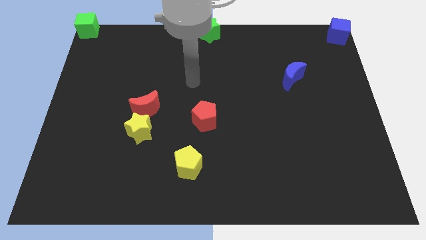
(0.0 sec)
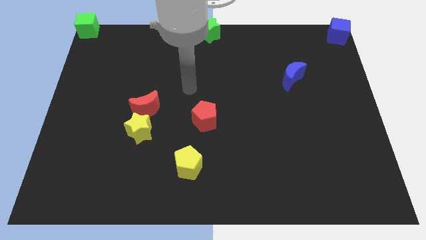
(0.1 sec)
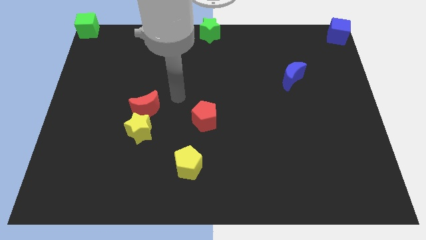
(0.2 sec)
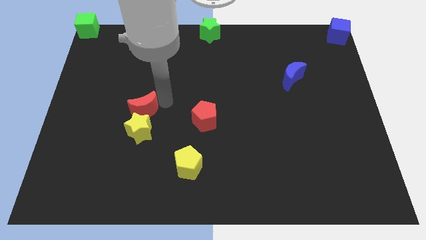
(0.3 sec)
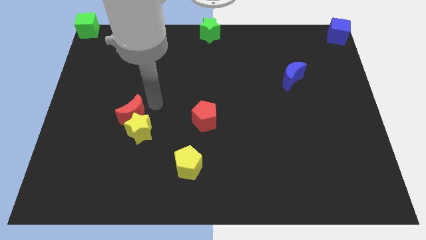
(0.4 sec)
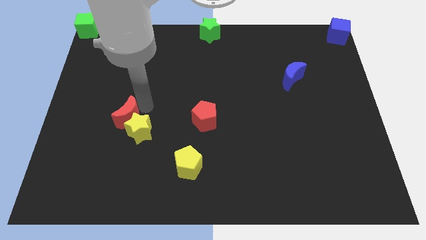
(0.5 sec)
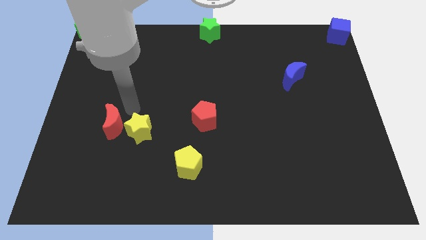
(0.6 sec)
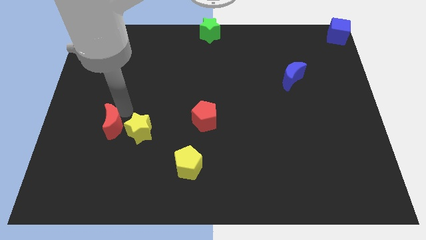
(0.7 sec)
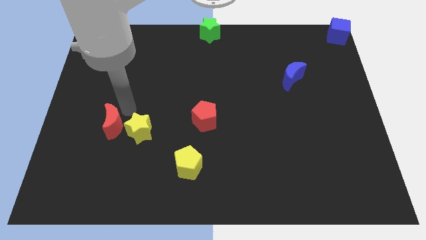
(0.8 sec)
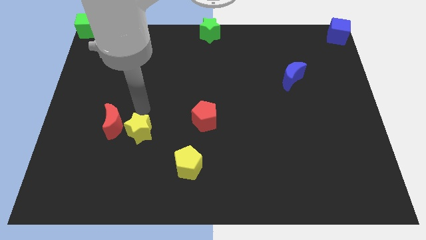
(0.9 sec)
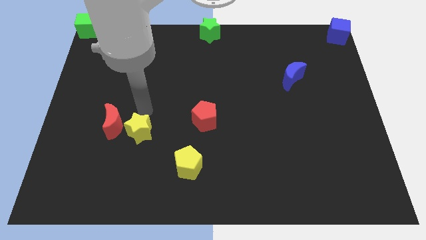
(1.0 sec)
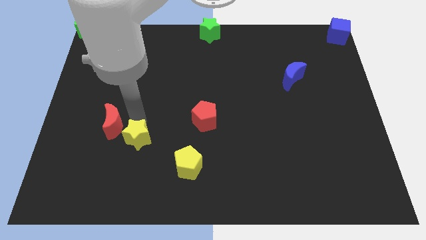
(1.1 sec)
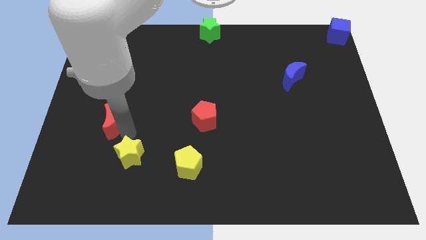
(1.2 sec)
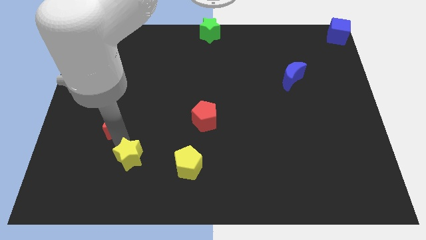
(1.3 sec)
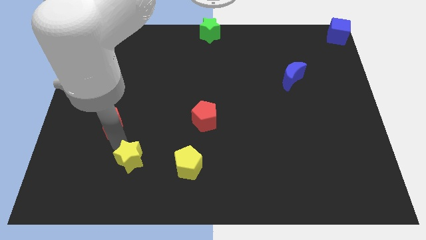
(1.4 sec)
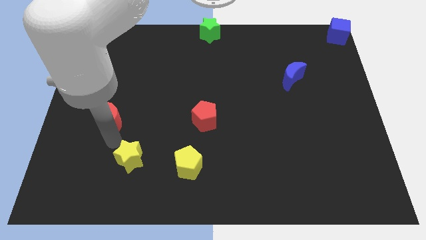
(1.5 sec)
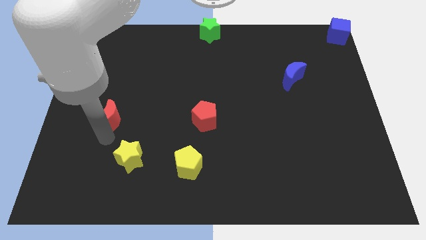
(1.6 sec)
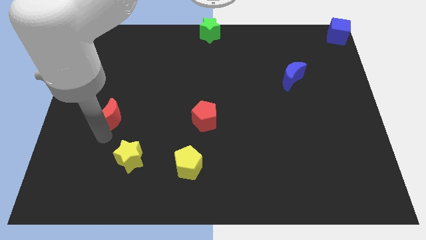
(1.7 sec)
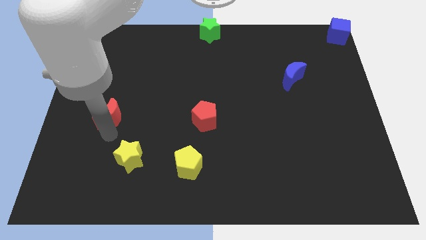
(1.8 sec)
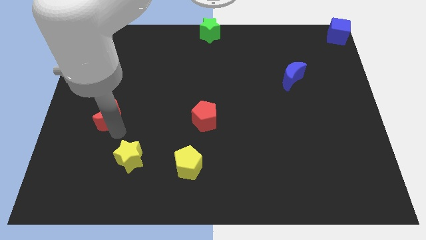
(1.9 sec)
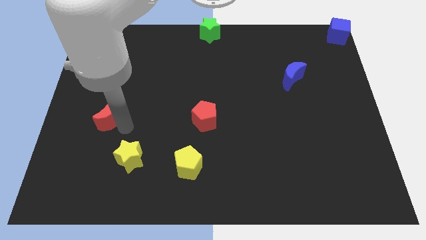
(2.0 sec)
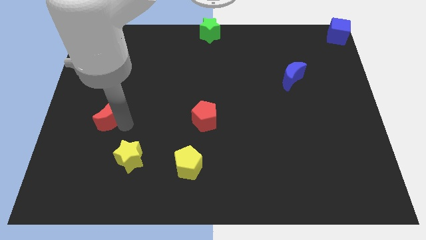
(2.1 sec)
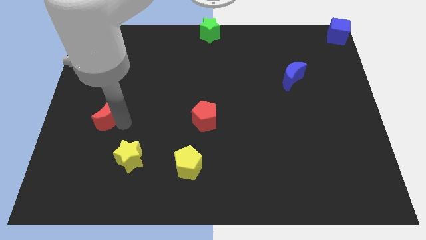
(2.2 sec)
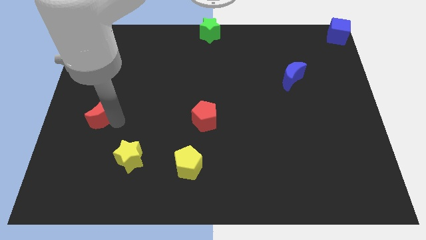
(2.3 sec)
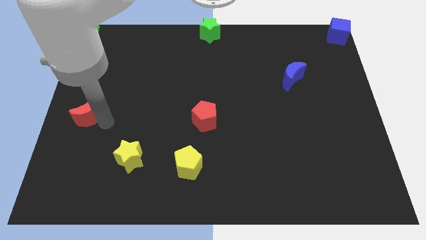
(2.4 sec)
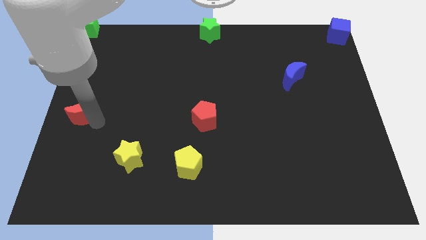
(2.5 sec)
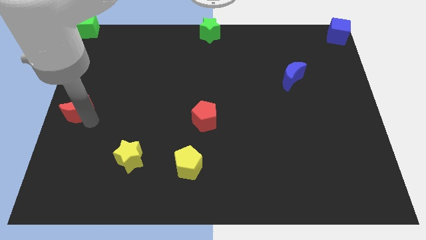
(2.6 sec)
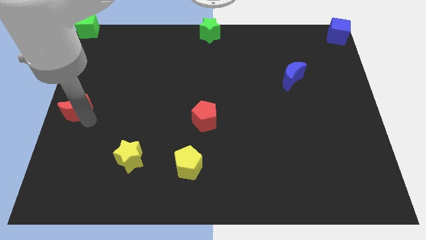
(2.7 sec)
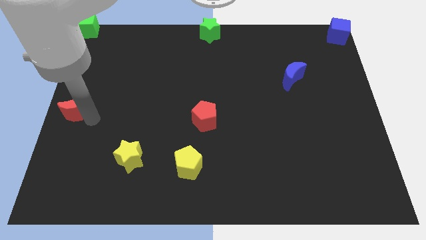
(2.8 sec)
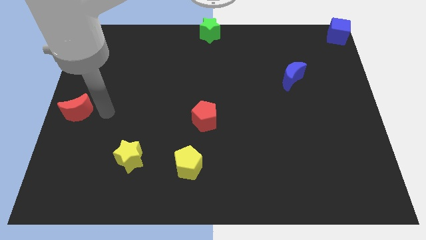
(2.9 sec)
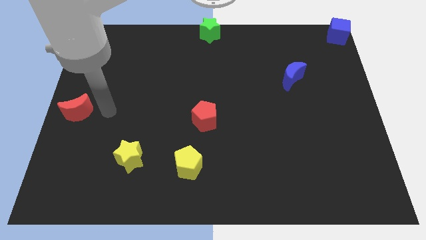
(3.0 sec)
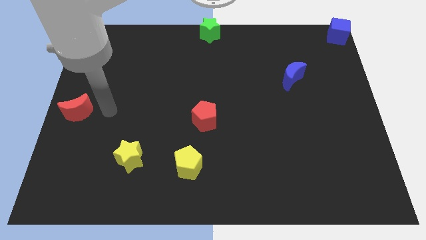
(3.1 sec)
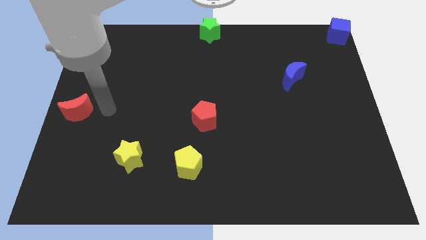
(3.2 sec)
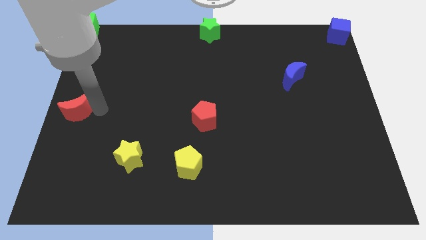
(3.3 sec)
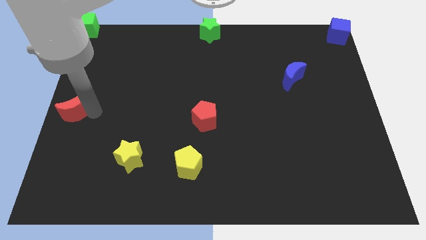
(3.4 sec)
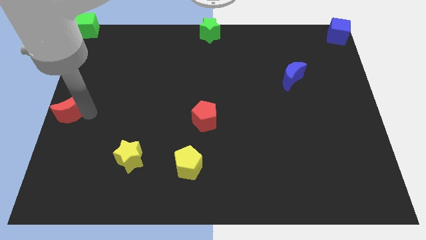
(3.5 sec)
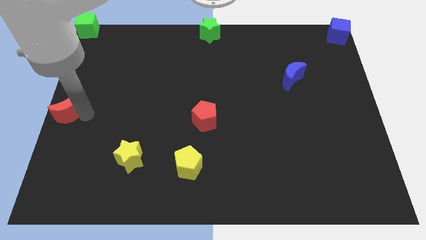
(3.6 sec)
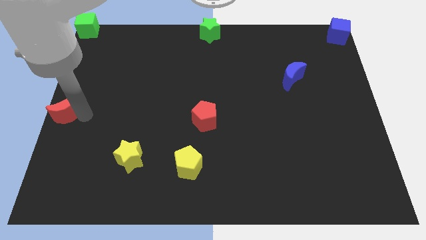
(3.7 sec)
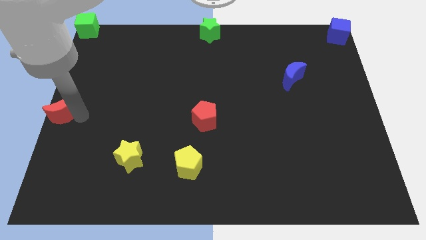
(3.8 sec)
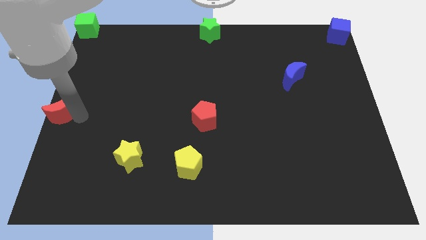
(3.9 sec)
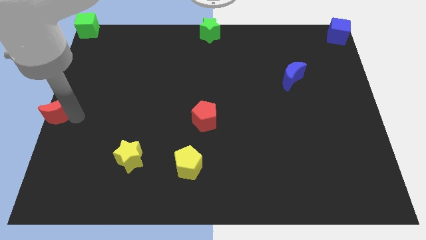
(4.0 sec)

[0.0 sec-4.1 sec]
separate red crescent from yellow star

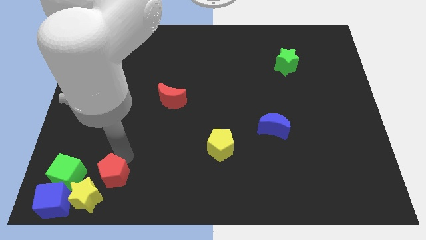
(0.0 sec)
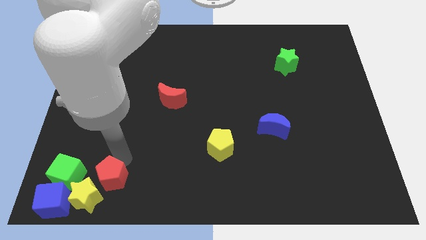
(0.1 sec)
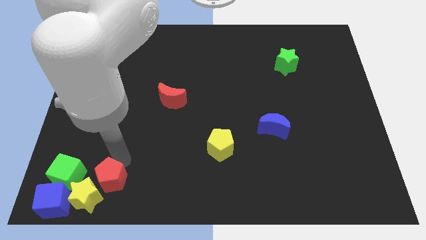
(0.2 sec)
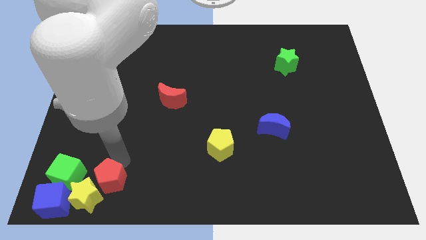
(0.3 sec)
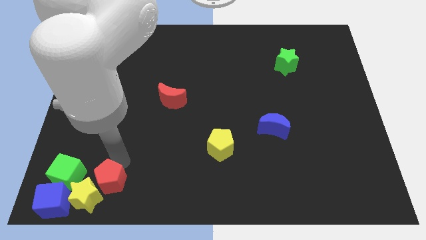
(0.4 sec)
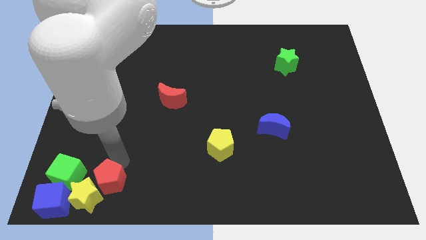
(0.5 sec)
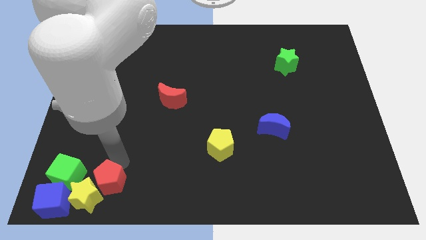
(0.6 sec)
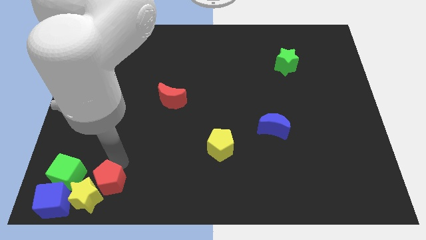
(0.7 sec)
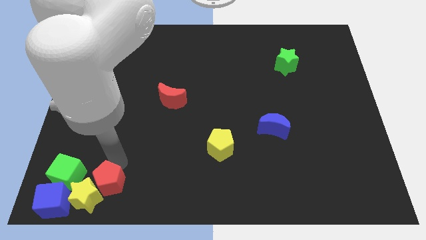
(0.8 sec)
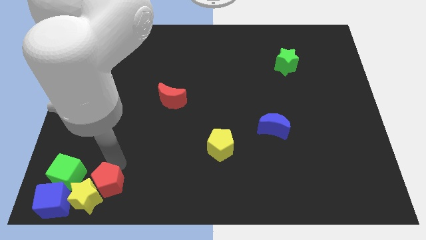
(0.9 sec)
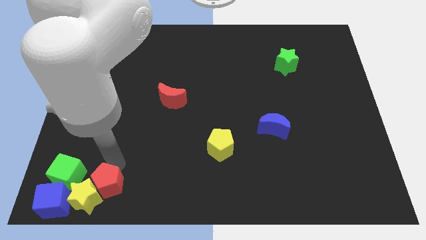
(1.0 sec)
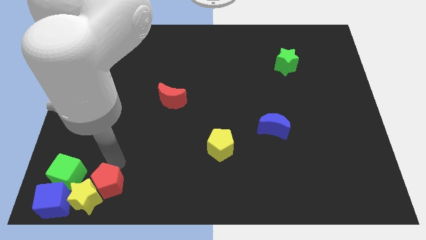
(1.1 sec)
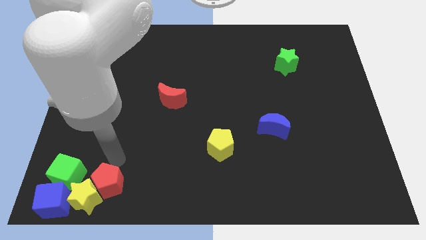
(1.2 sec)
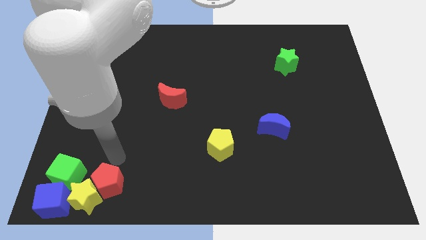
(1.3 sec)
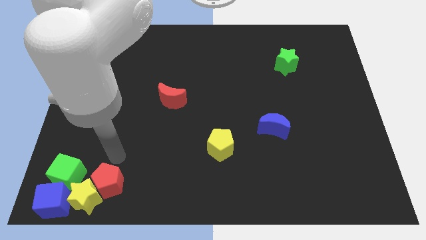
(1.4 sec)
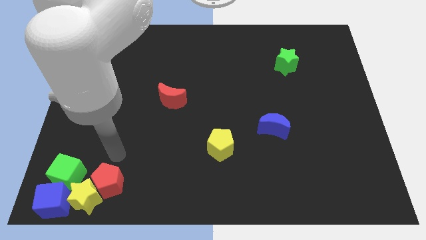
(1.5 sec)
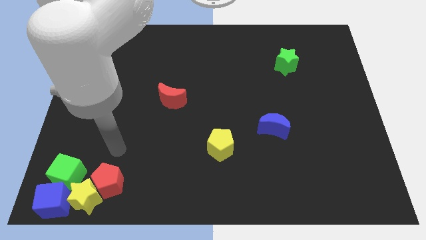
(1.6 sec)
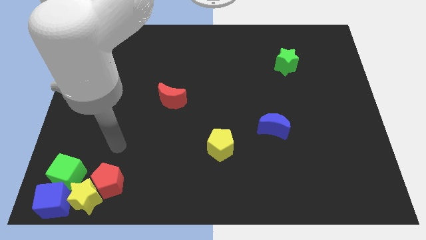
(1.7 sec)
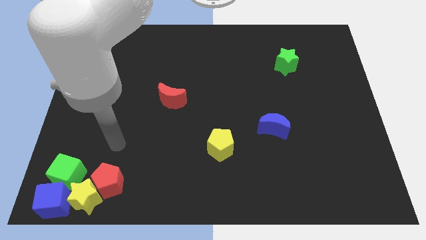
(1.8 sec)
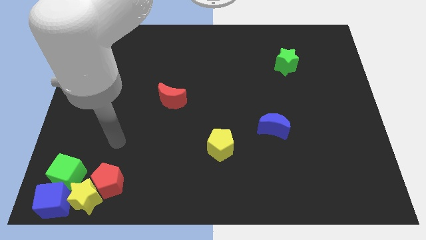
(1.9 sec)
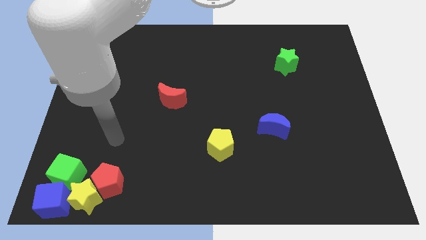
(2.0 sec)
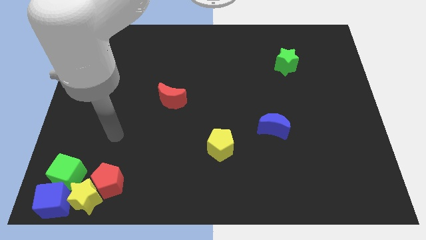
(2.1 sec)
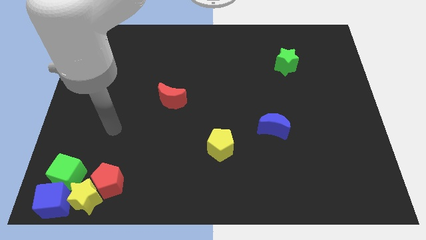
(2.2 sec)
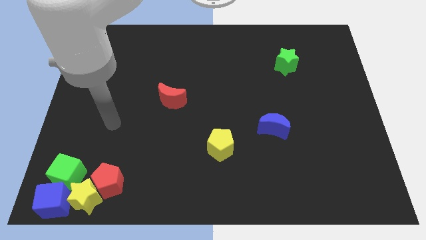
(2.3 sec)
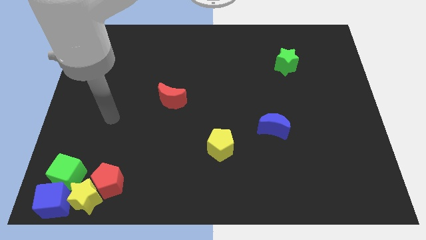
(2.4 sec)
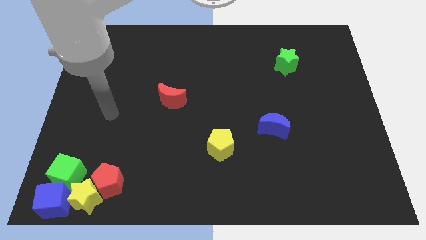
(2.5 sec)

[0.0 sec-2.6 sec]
place the red pentagon above the yellow star

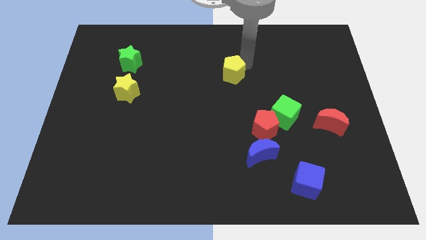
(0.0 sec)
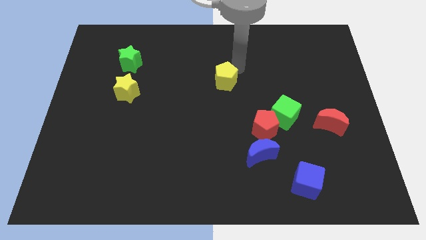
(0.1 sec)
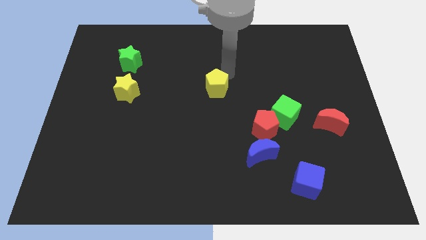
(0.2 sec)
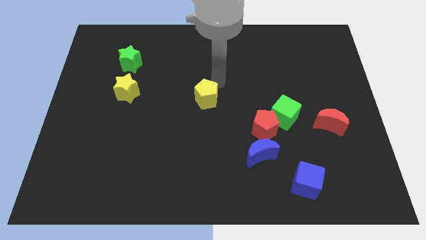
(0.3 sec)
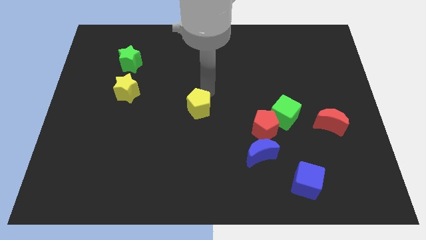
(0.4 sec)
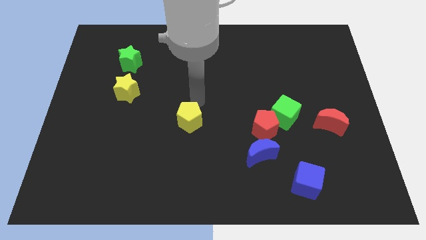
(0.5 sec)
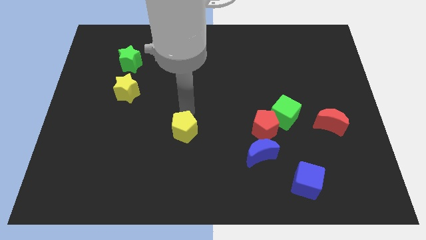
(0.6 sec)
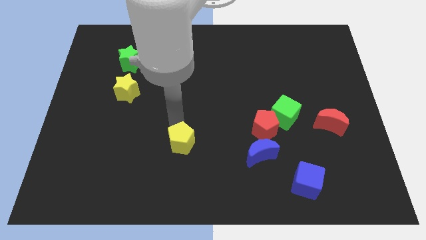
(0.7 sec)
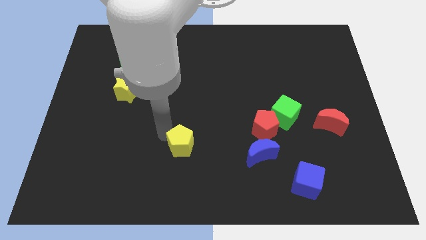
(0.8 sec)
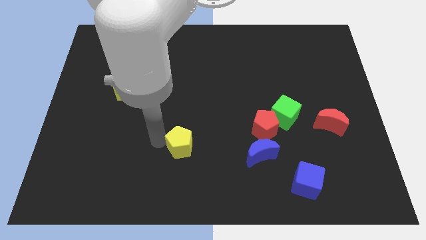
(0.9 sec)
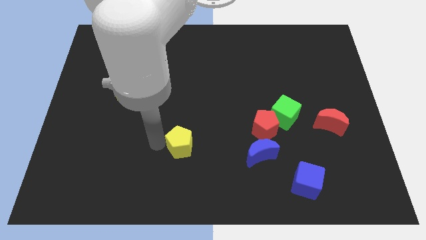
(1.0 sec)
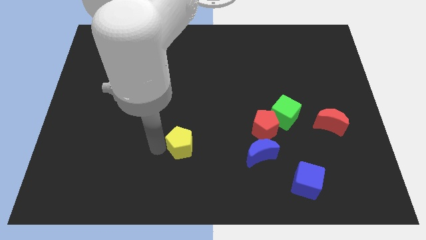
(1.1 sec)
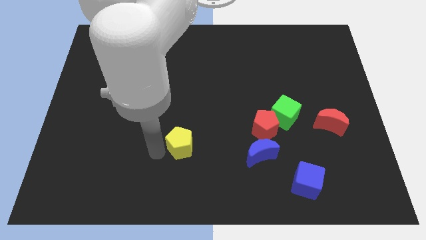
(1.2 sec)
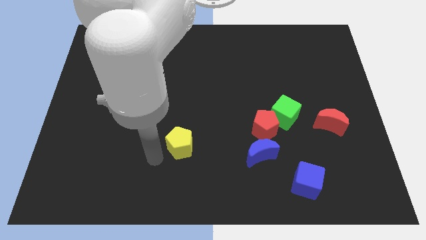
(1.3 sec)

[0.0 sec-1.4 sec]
move the yellow pentagon parallel to the blue moon

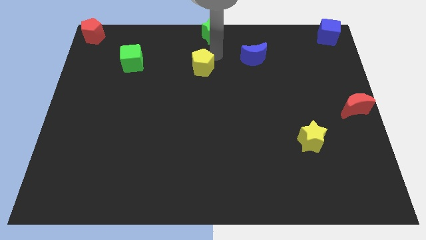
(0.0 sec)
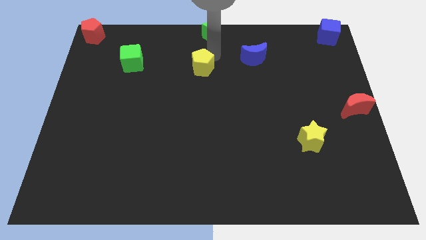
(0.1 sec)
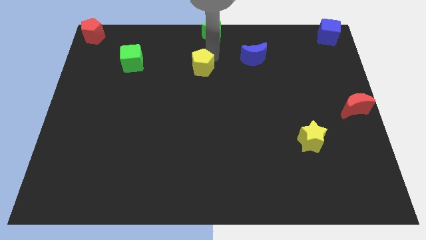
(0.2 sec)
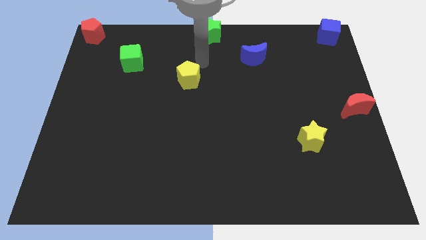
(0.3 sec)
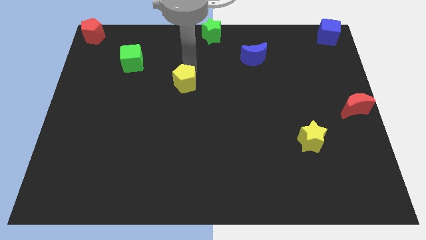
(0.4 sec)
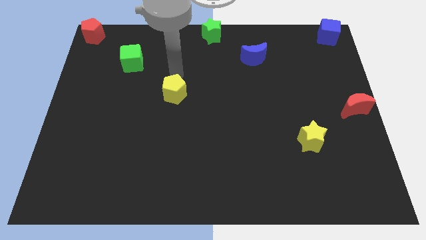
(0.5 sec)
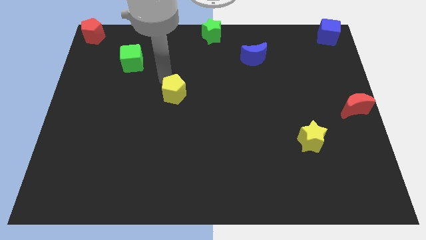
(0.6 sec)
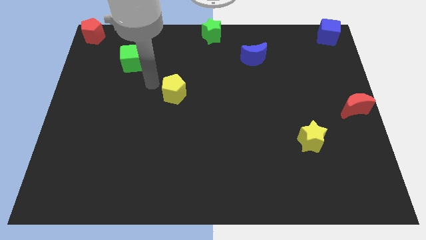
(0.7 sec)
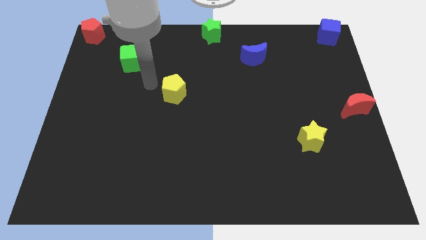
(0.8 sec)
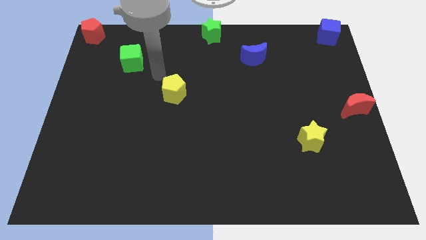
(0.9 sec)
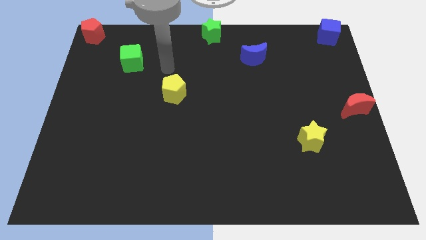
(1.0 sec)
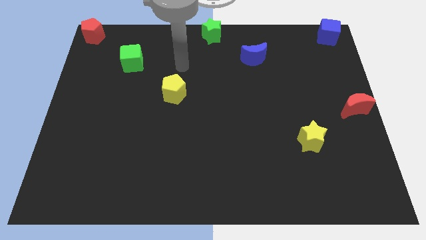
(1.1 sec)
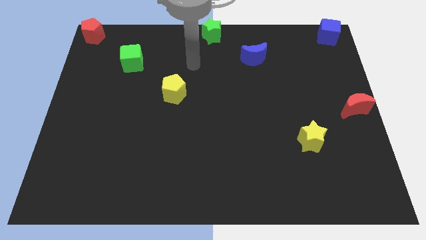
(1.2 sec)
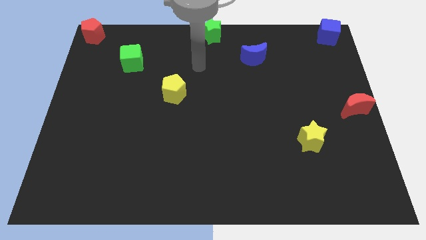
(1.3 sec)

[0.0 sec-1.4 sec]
push the yellow pentagon diagonally to the bottom right of the green cube
